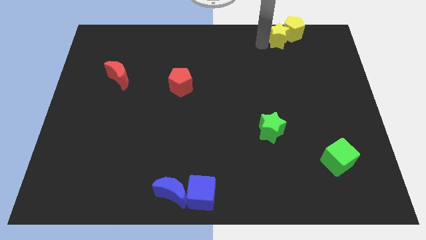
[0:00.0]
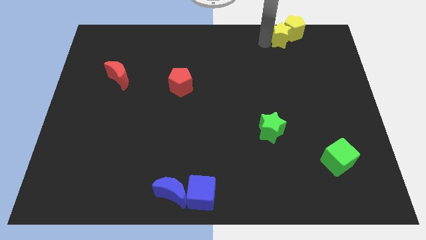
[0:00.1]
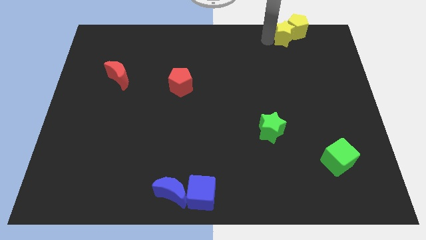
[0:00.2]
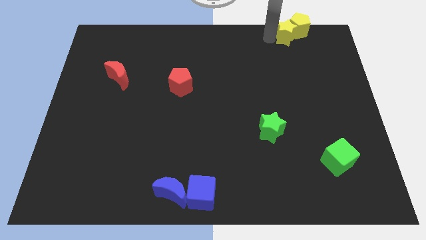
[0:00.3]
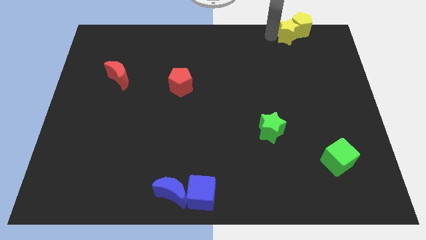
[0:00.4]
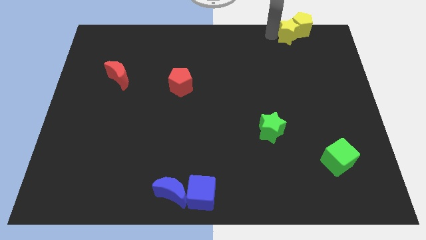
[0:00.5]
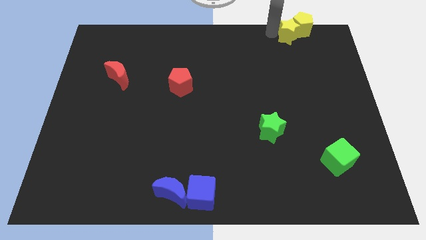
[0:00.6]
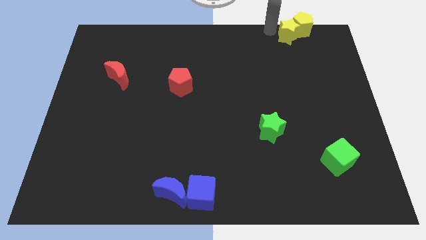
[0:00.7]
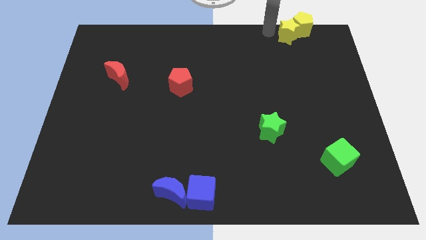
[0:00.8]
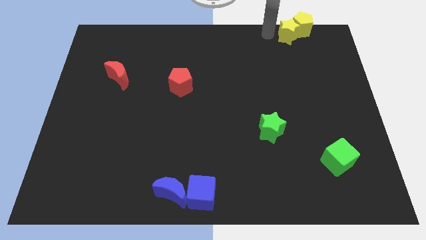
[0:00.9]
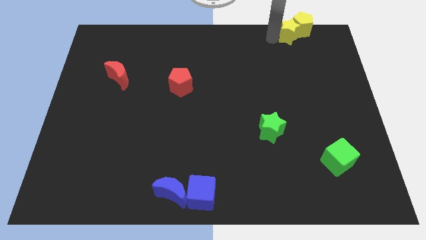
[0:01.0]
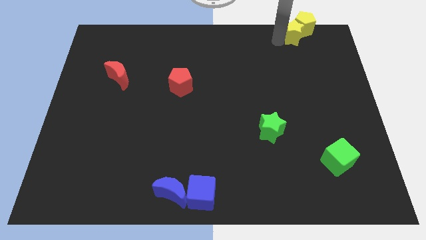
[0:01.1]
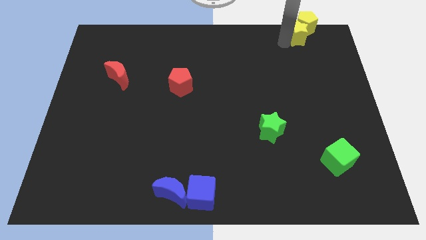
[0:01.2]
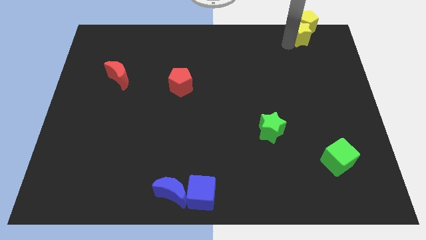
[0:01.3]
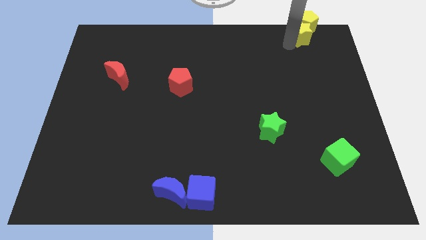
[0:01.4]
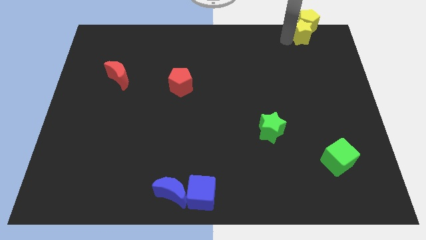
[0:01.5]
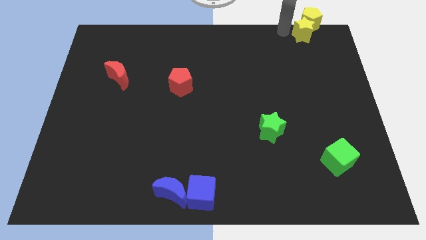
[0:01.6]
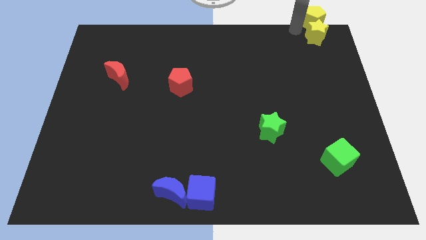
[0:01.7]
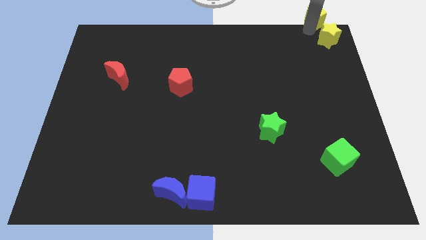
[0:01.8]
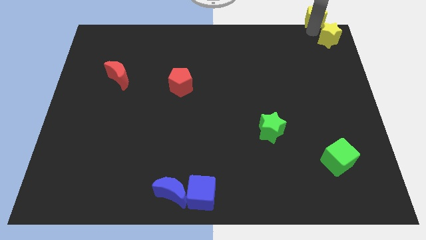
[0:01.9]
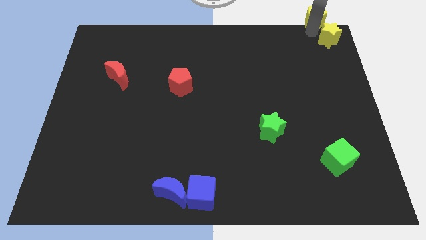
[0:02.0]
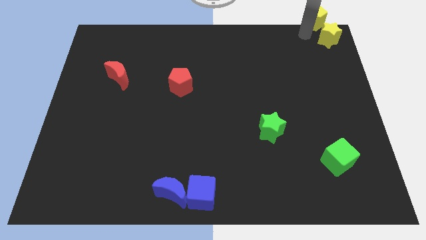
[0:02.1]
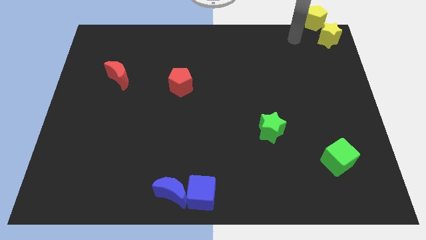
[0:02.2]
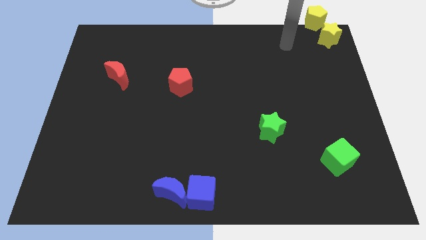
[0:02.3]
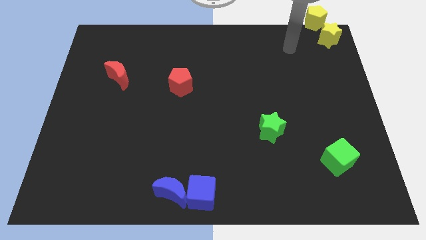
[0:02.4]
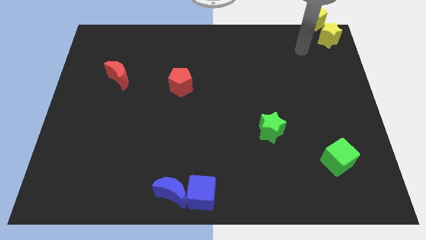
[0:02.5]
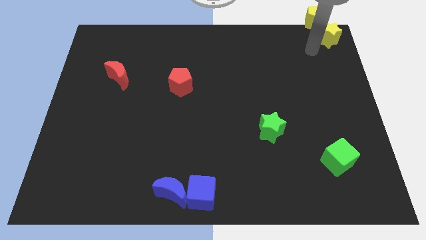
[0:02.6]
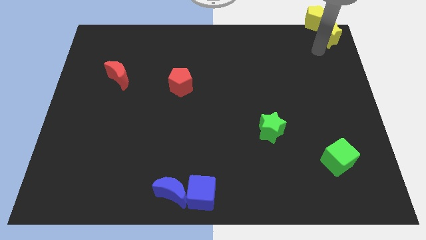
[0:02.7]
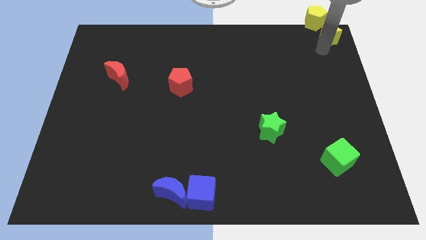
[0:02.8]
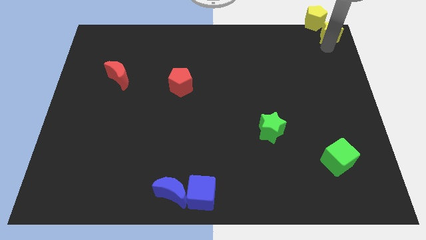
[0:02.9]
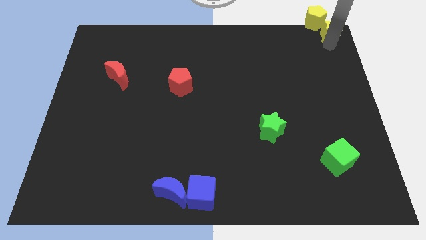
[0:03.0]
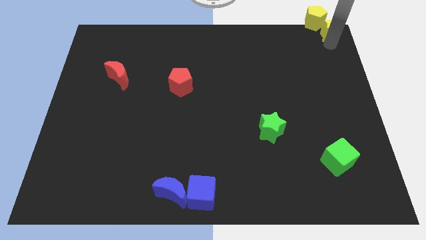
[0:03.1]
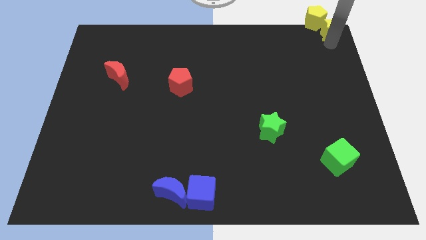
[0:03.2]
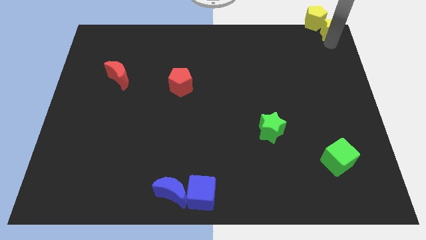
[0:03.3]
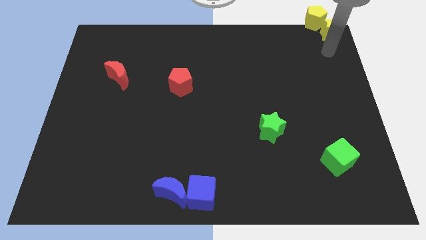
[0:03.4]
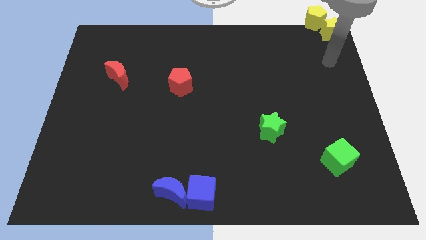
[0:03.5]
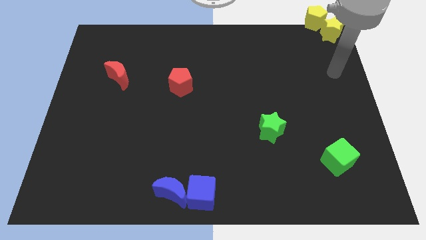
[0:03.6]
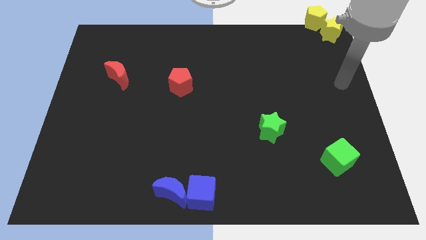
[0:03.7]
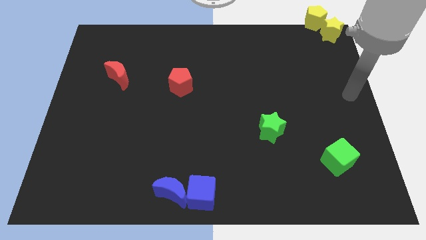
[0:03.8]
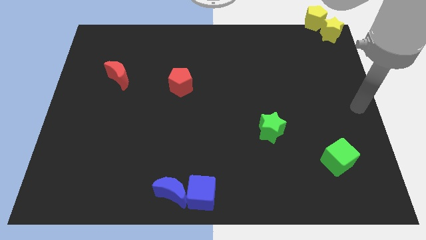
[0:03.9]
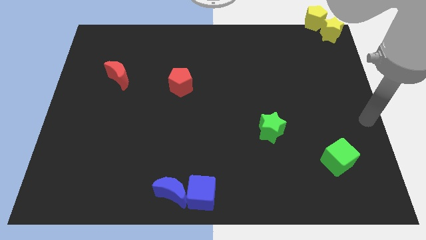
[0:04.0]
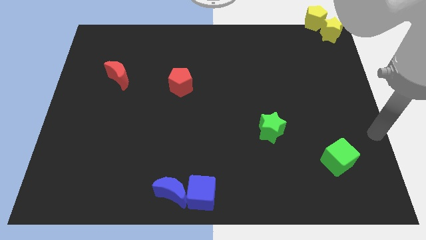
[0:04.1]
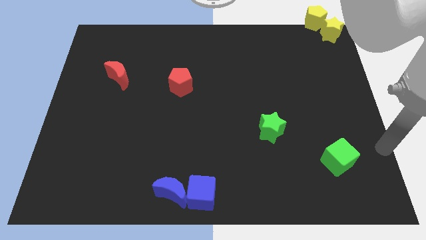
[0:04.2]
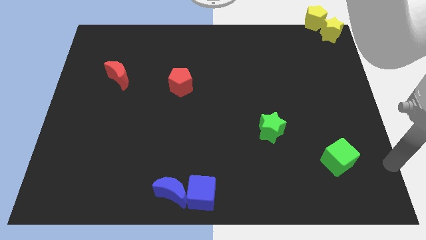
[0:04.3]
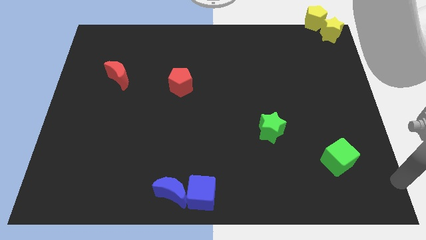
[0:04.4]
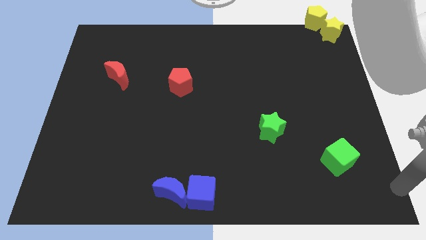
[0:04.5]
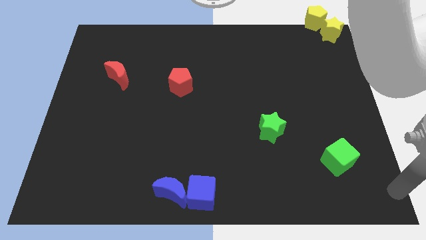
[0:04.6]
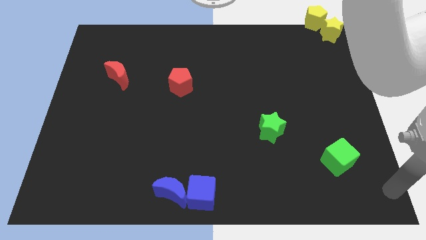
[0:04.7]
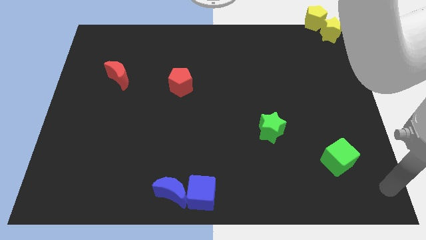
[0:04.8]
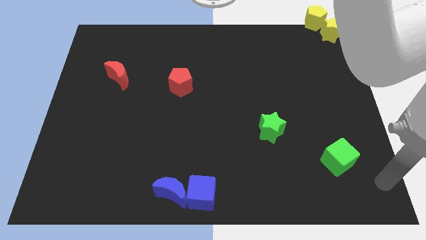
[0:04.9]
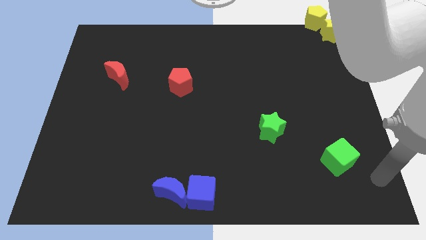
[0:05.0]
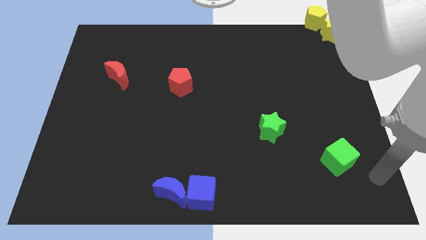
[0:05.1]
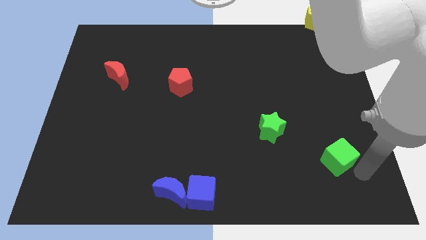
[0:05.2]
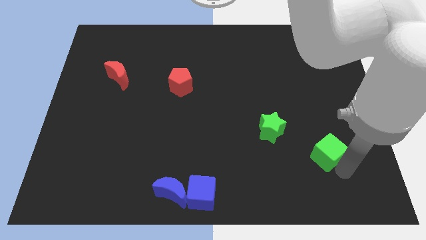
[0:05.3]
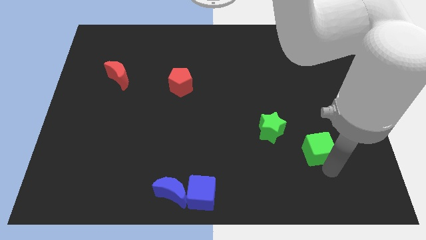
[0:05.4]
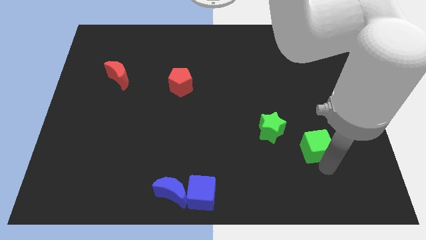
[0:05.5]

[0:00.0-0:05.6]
place your arm below green cube

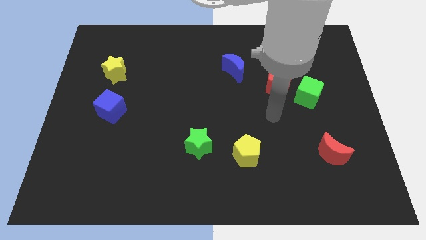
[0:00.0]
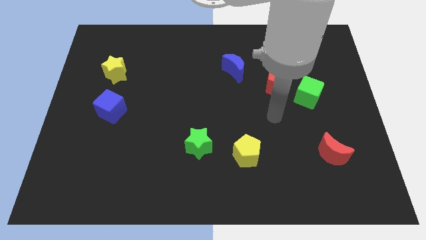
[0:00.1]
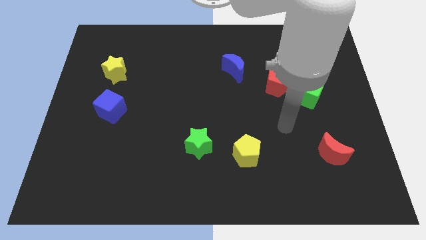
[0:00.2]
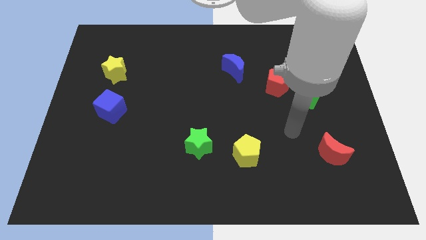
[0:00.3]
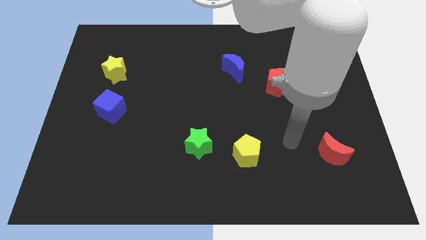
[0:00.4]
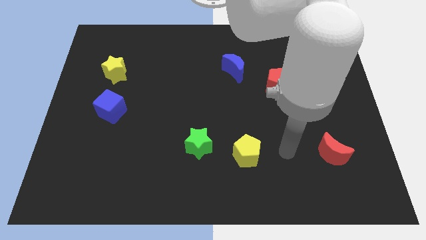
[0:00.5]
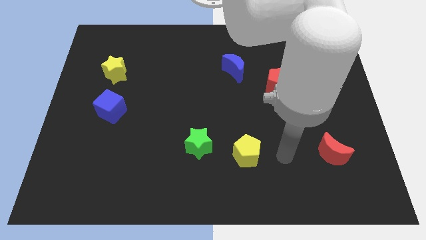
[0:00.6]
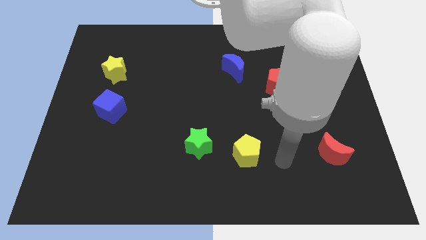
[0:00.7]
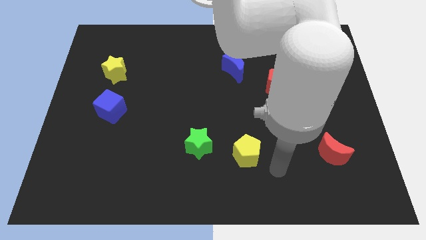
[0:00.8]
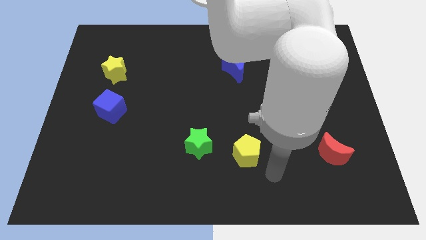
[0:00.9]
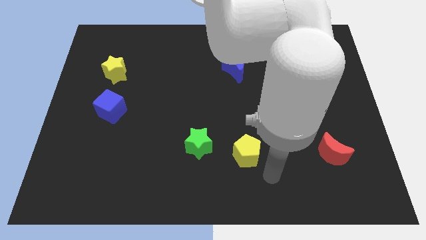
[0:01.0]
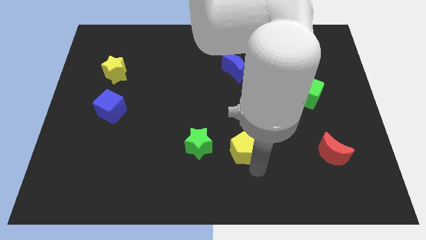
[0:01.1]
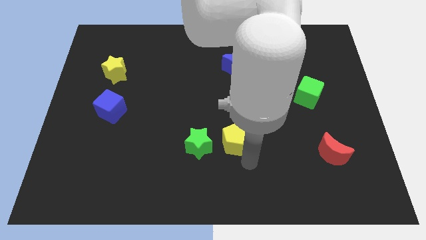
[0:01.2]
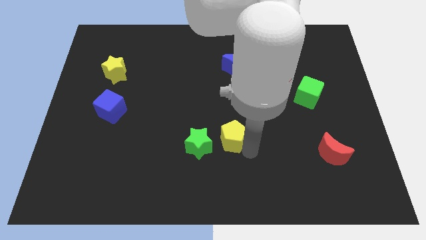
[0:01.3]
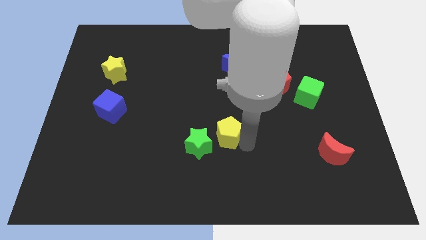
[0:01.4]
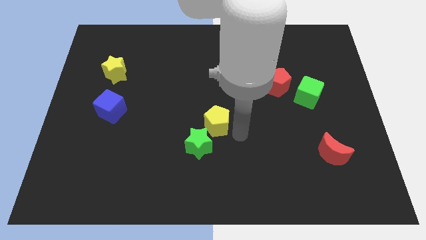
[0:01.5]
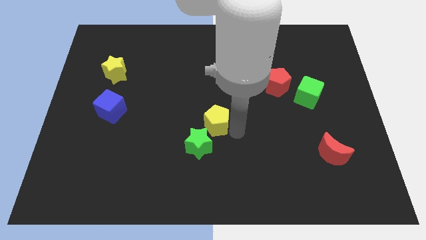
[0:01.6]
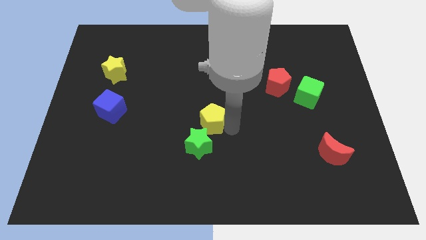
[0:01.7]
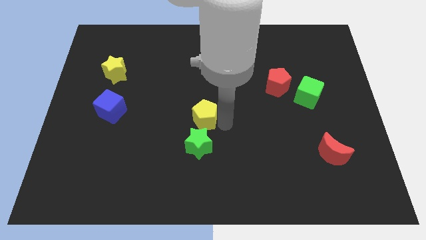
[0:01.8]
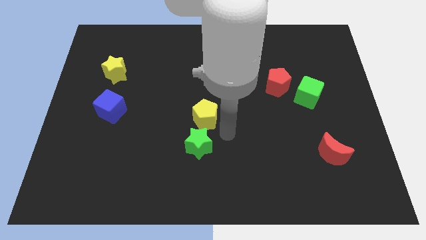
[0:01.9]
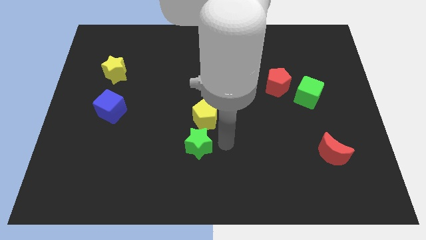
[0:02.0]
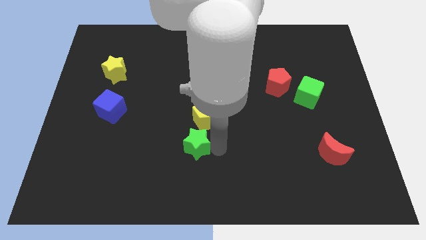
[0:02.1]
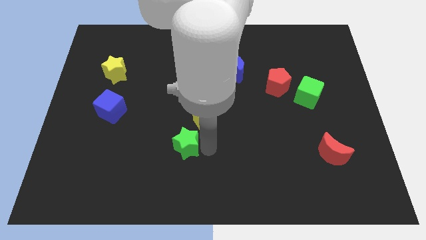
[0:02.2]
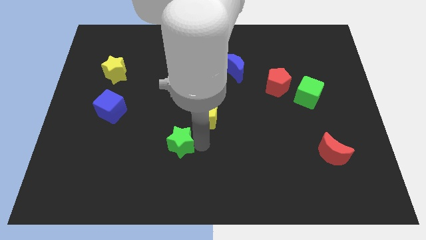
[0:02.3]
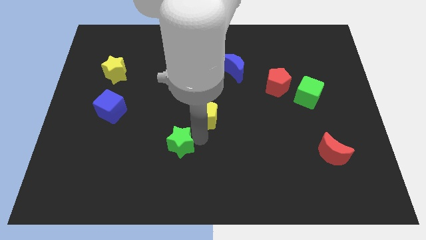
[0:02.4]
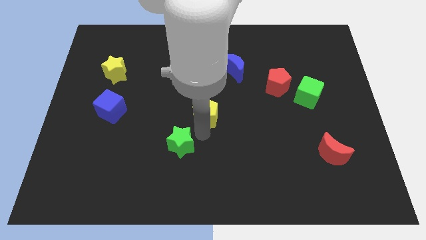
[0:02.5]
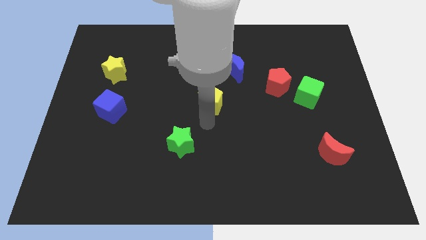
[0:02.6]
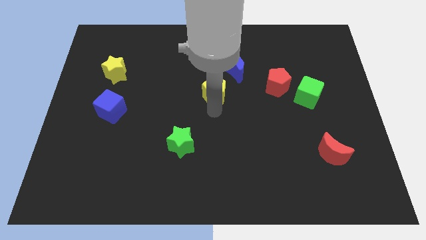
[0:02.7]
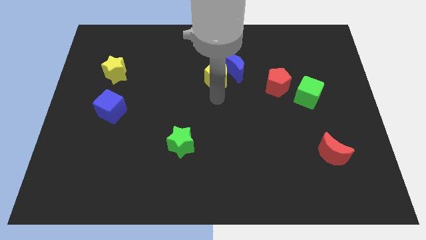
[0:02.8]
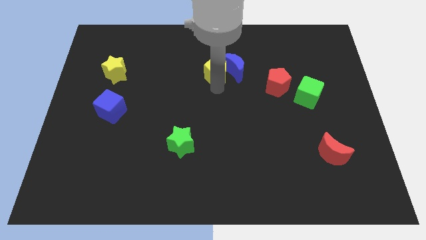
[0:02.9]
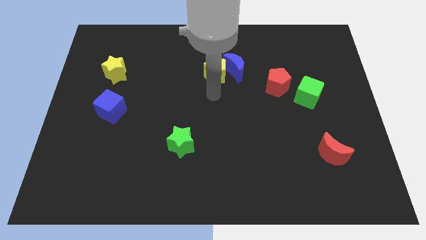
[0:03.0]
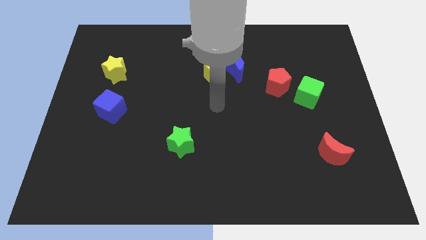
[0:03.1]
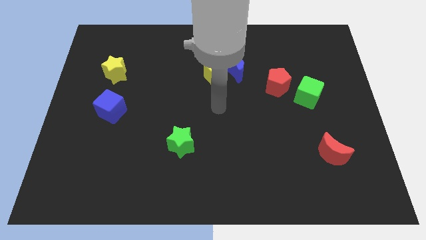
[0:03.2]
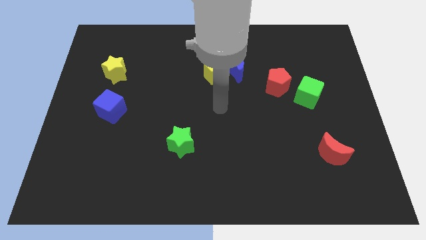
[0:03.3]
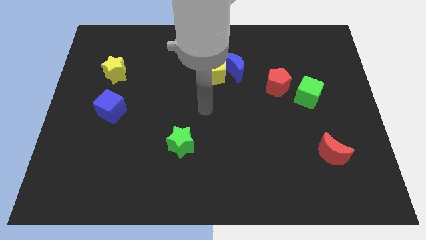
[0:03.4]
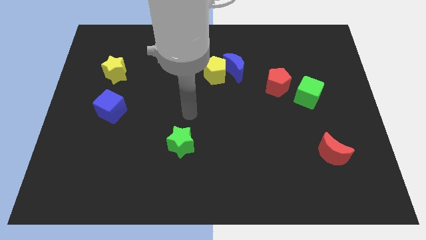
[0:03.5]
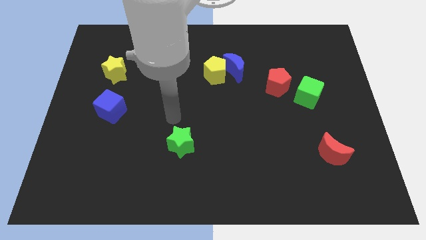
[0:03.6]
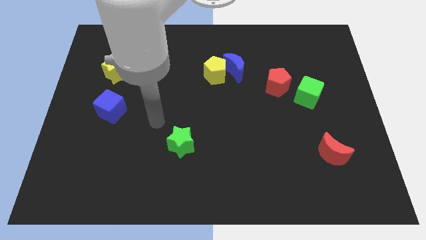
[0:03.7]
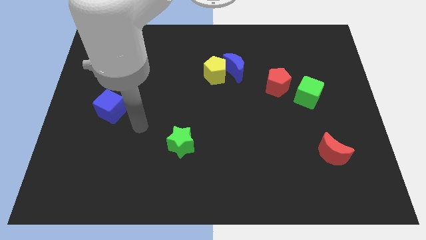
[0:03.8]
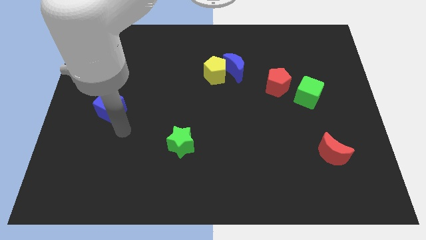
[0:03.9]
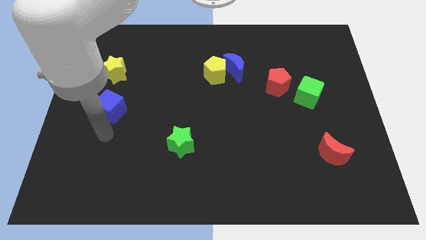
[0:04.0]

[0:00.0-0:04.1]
push the yellow pentagon to the left of the blue moon
